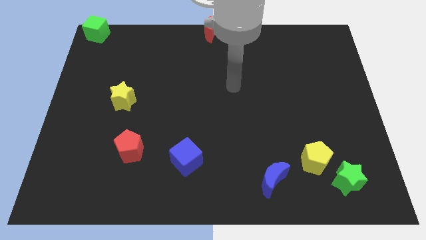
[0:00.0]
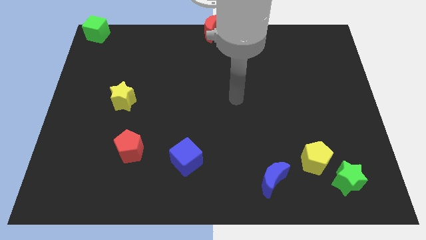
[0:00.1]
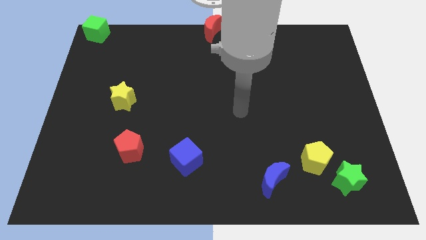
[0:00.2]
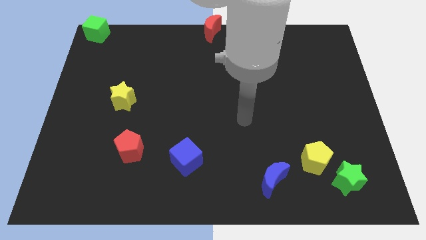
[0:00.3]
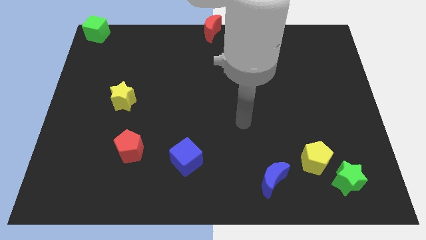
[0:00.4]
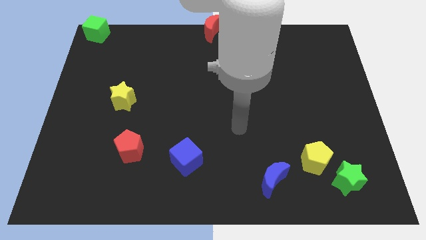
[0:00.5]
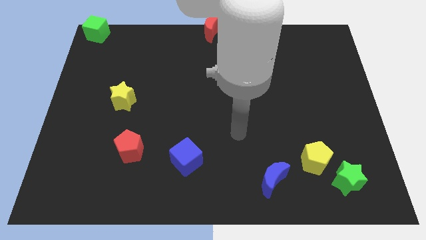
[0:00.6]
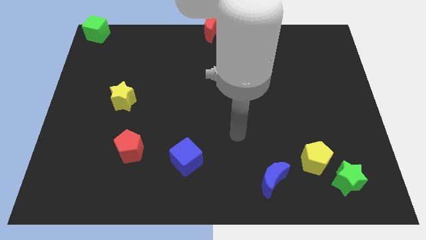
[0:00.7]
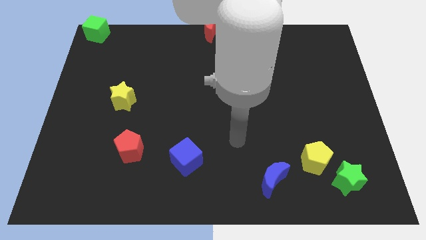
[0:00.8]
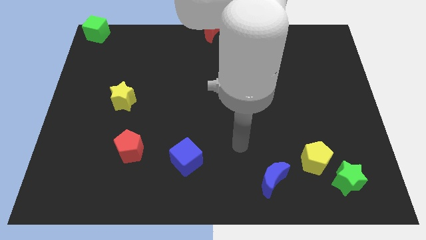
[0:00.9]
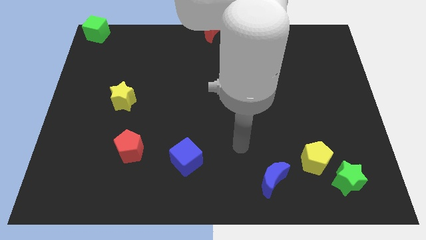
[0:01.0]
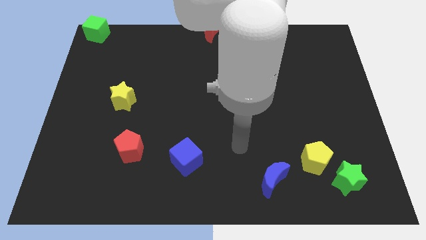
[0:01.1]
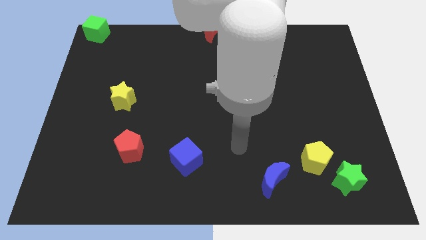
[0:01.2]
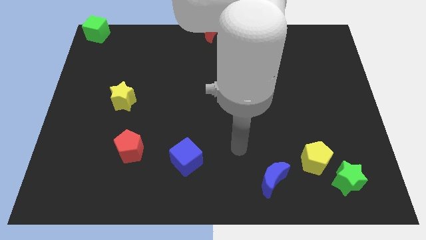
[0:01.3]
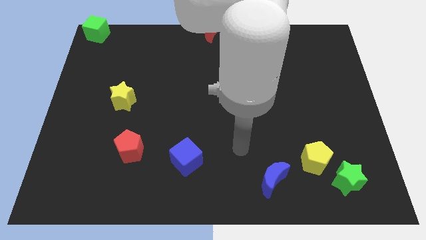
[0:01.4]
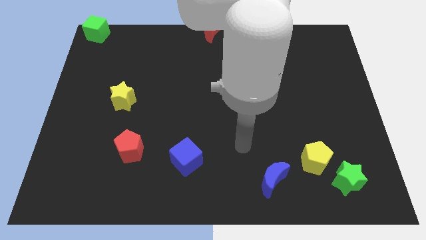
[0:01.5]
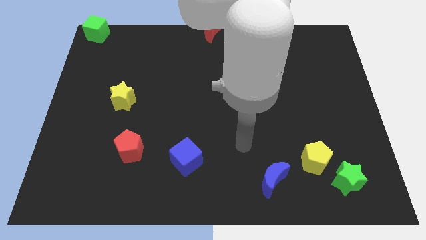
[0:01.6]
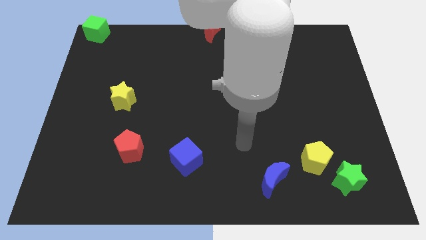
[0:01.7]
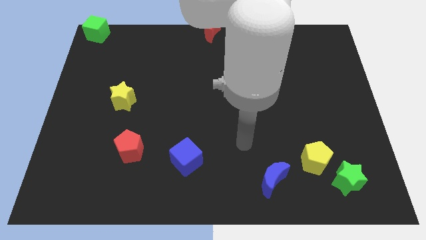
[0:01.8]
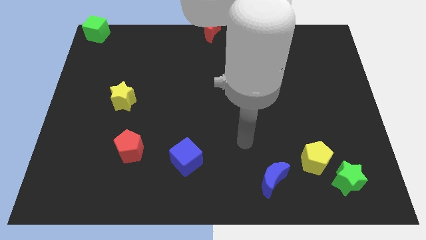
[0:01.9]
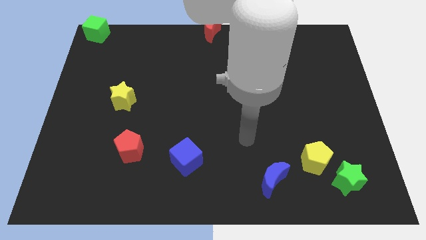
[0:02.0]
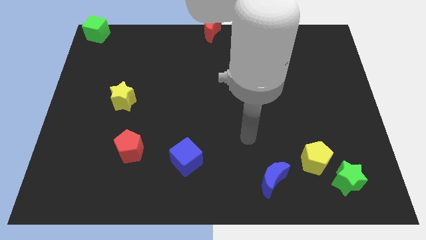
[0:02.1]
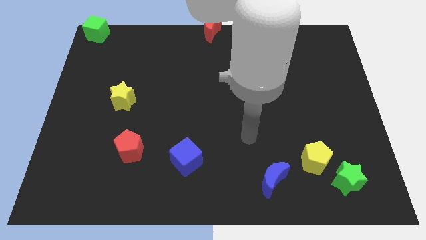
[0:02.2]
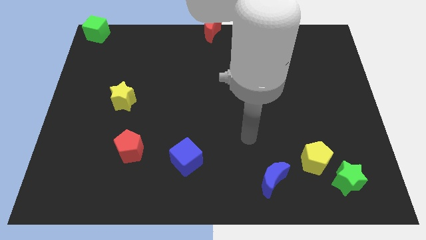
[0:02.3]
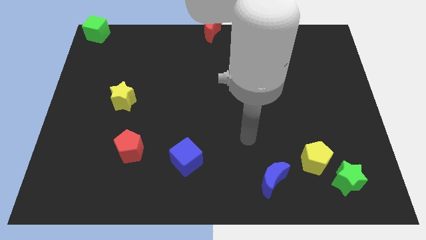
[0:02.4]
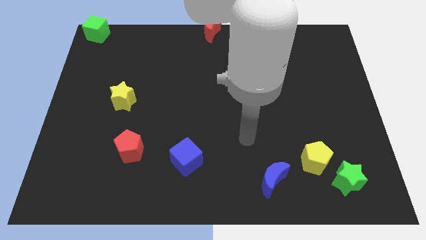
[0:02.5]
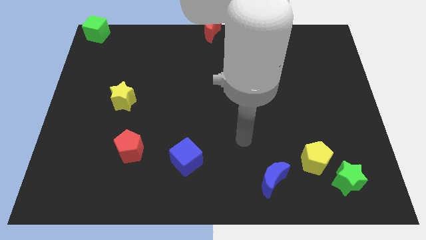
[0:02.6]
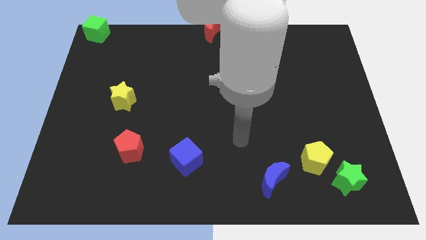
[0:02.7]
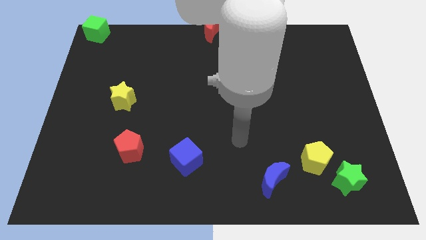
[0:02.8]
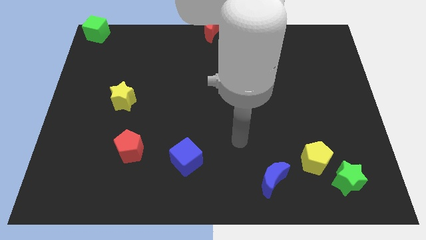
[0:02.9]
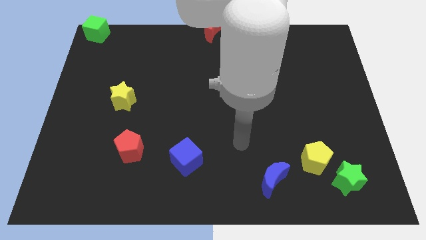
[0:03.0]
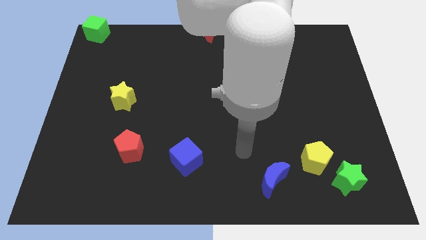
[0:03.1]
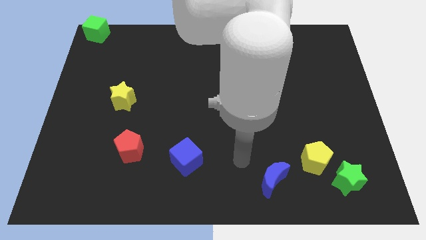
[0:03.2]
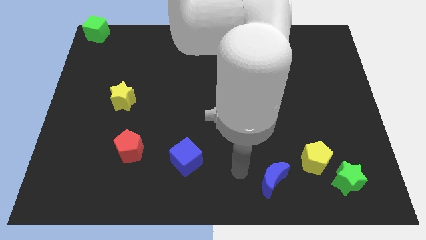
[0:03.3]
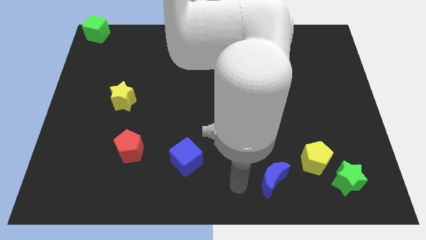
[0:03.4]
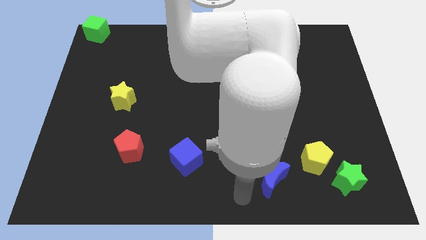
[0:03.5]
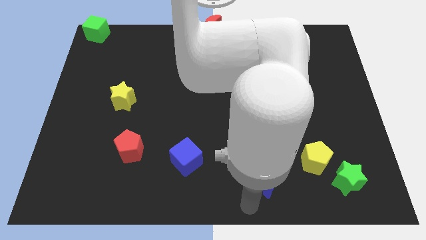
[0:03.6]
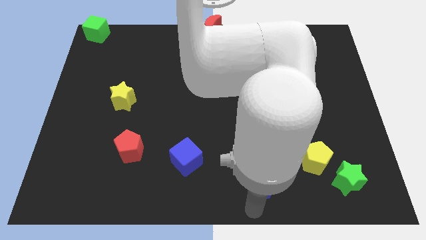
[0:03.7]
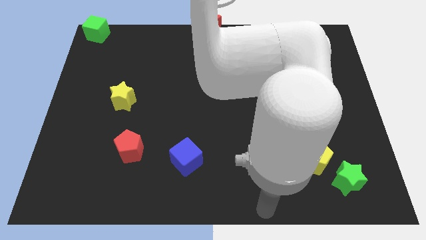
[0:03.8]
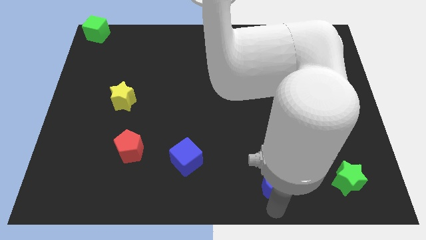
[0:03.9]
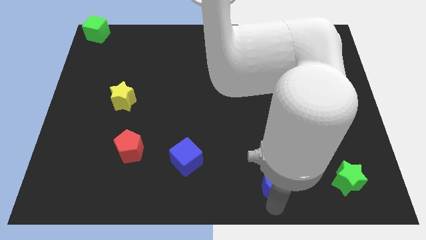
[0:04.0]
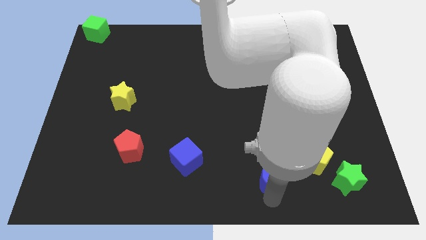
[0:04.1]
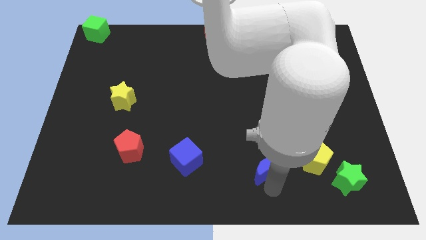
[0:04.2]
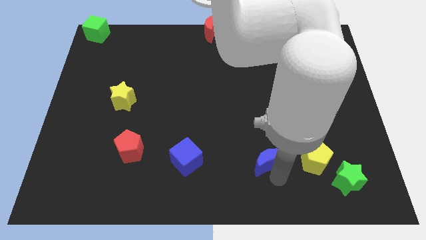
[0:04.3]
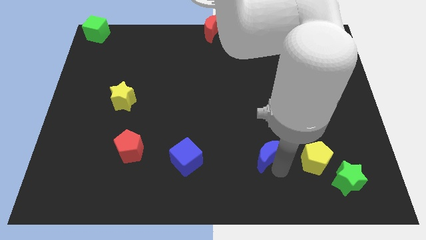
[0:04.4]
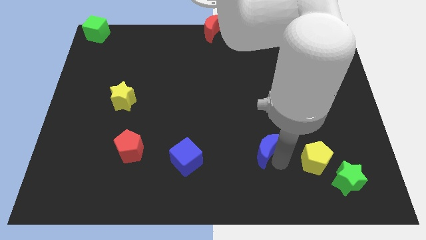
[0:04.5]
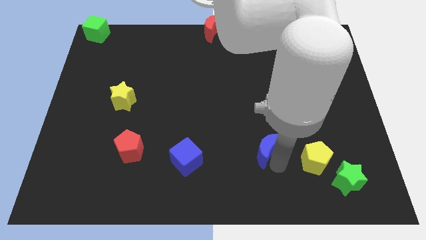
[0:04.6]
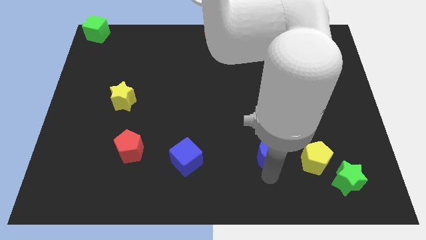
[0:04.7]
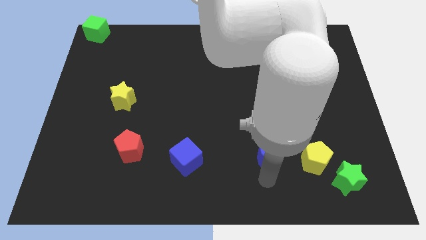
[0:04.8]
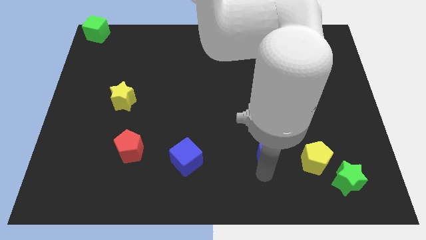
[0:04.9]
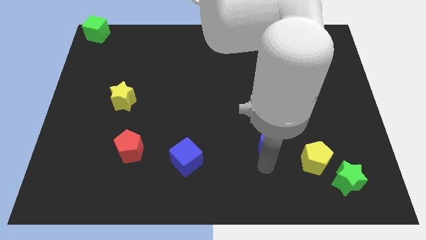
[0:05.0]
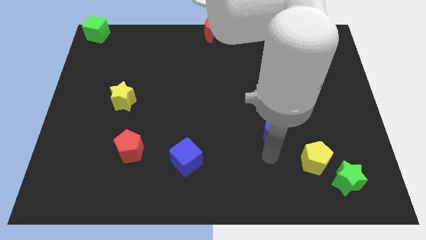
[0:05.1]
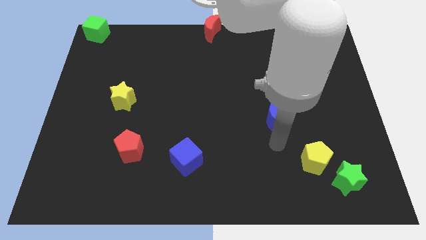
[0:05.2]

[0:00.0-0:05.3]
move the blue crescent to the top left of the yellow pentagon

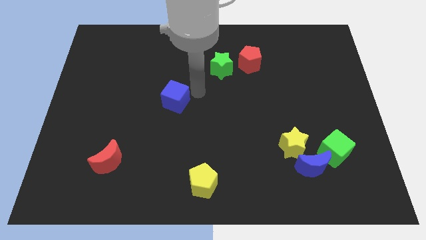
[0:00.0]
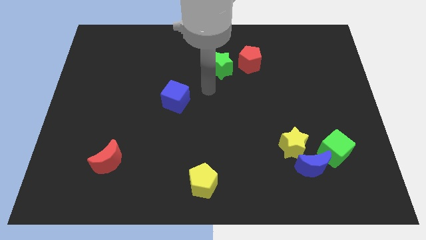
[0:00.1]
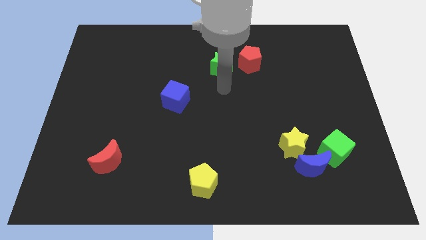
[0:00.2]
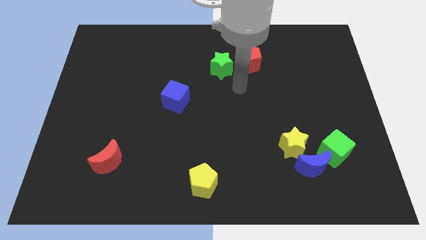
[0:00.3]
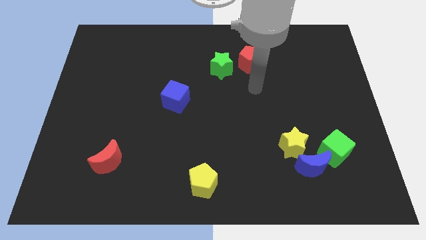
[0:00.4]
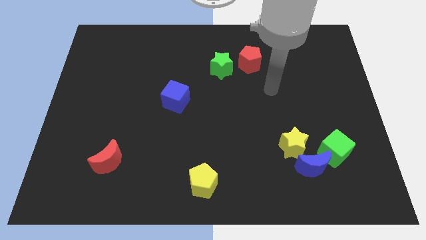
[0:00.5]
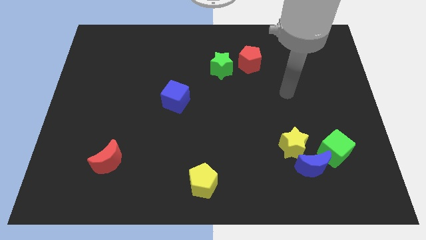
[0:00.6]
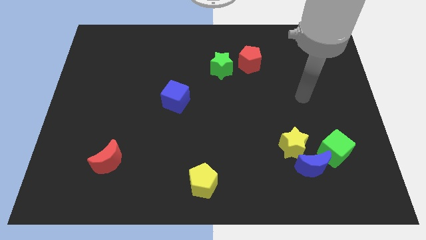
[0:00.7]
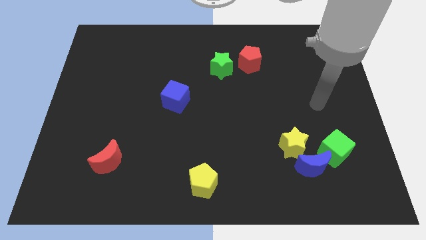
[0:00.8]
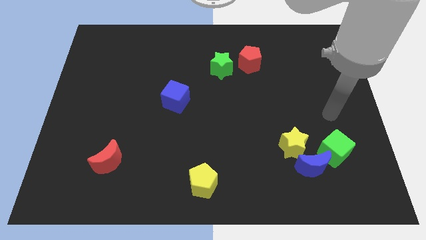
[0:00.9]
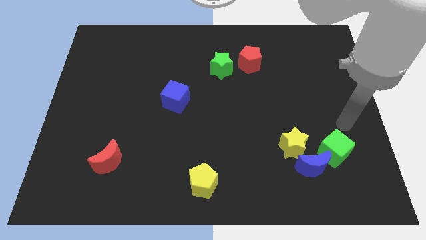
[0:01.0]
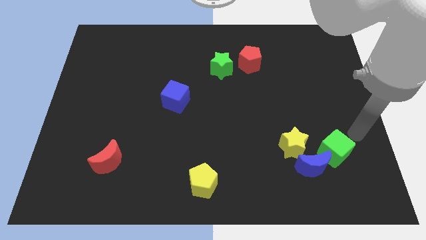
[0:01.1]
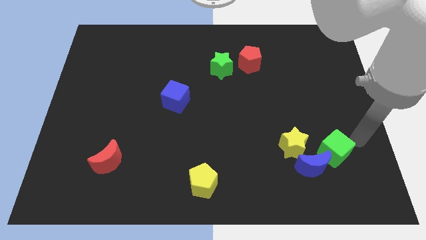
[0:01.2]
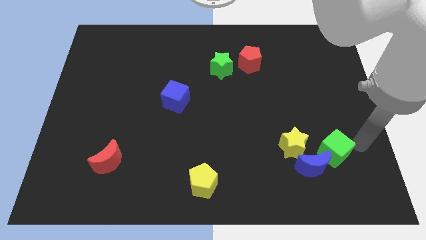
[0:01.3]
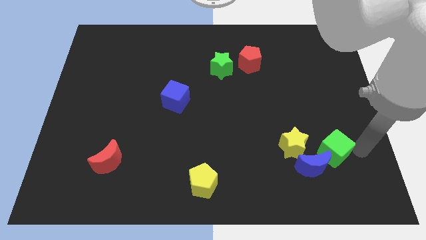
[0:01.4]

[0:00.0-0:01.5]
move your arm away from the blue cube

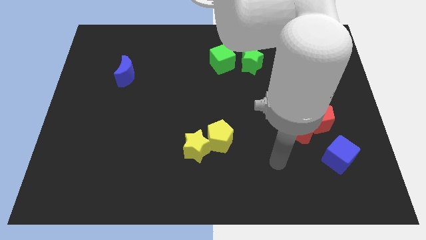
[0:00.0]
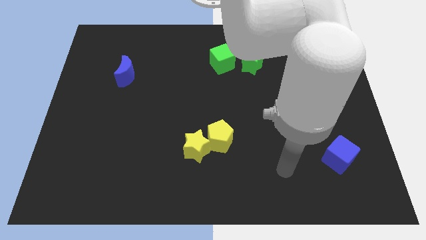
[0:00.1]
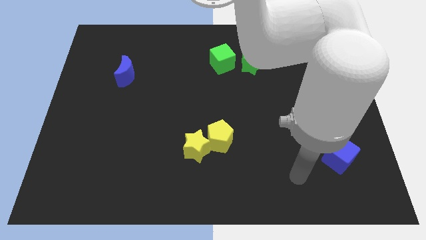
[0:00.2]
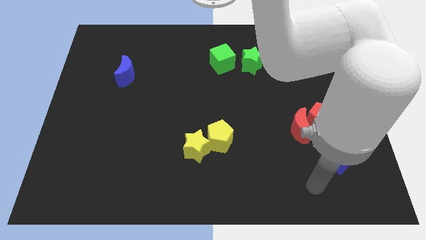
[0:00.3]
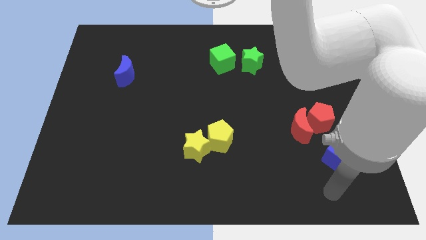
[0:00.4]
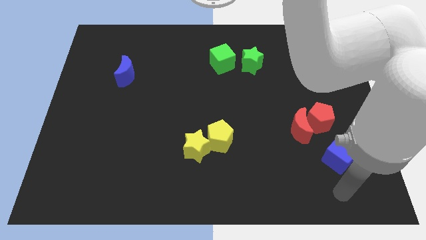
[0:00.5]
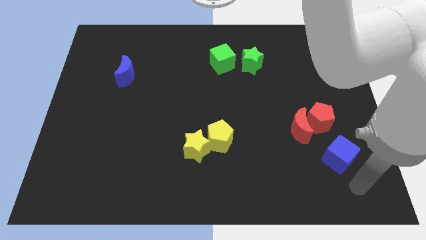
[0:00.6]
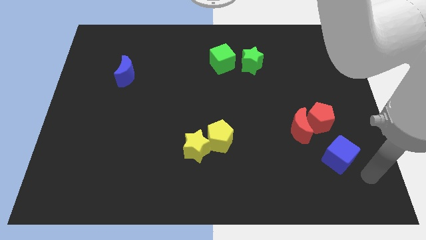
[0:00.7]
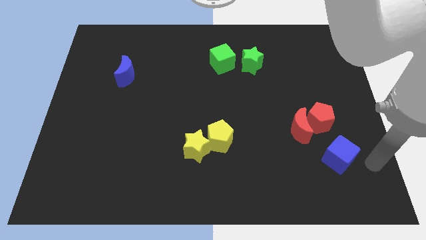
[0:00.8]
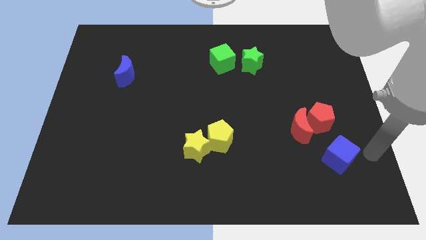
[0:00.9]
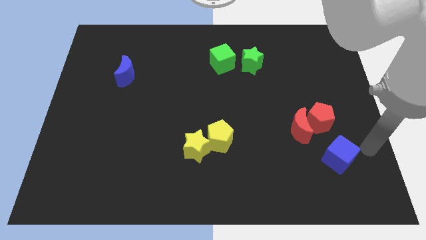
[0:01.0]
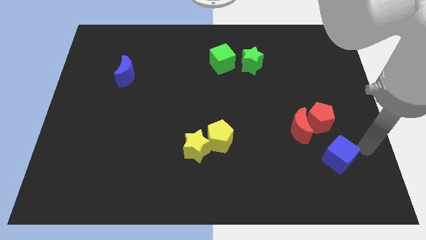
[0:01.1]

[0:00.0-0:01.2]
move your arm to the right of blue cube

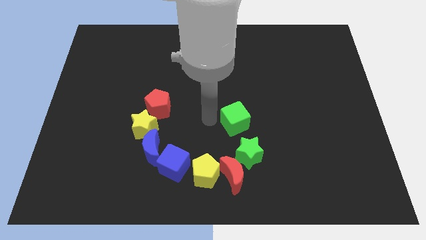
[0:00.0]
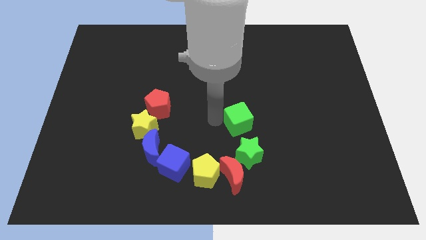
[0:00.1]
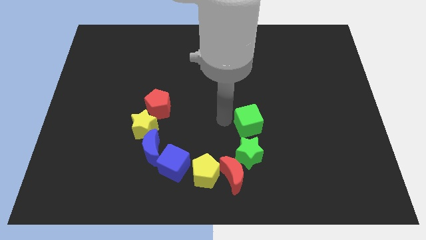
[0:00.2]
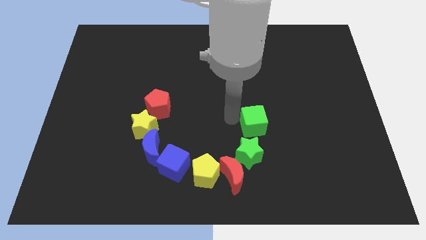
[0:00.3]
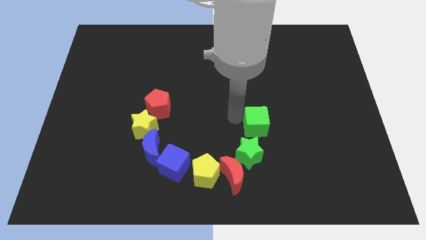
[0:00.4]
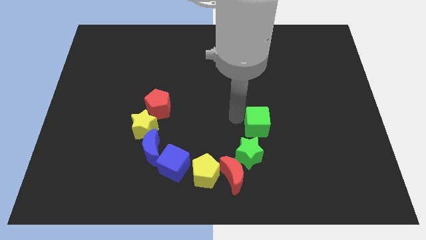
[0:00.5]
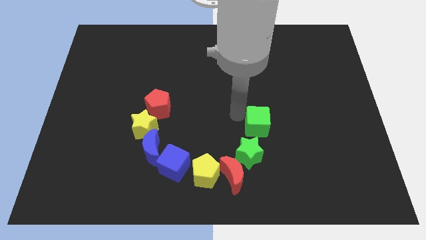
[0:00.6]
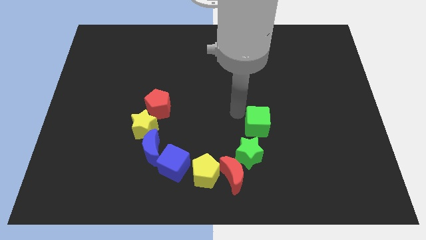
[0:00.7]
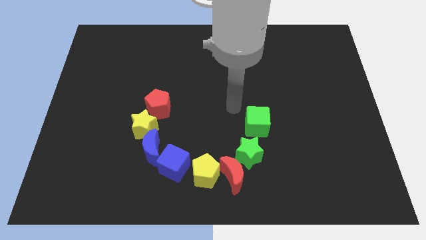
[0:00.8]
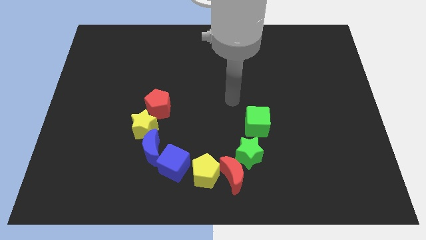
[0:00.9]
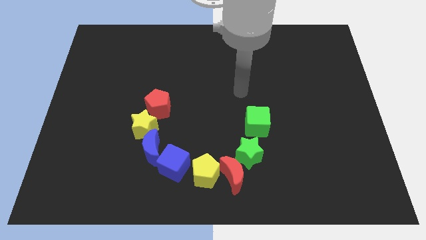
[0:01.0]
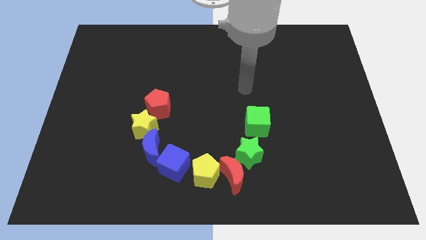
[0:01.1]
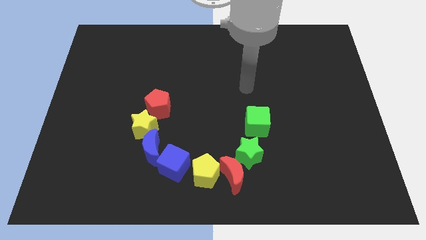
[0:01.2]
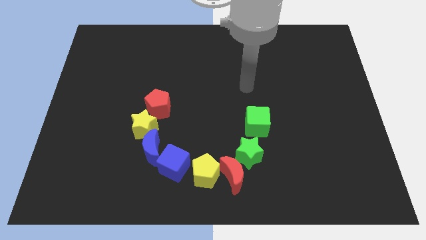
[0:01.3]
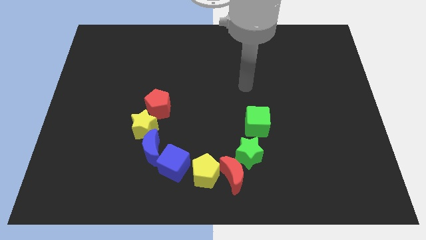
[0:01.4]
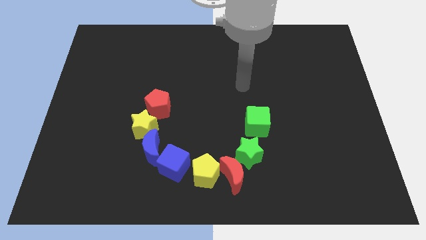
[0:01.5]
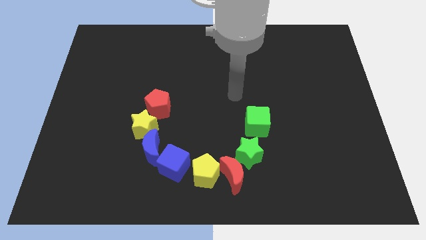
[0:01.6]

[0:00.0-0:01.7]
place the green cube above the green star
